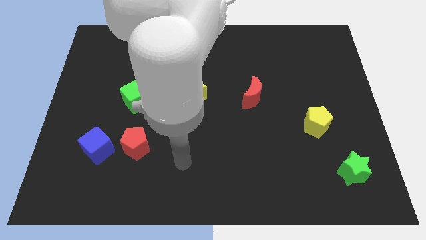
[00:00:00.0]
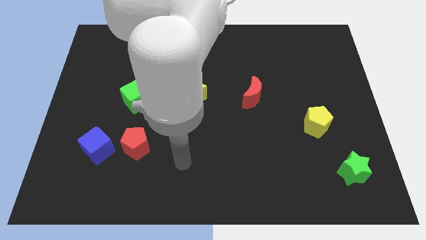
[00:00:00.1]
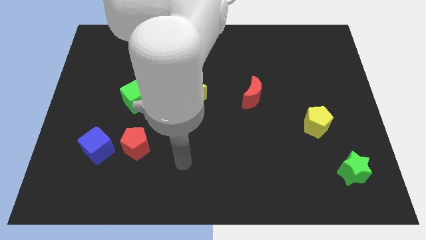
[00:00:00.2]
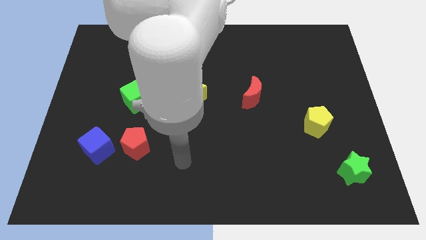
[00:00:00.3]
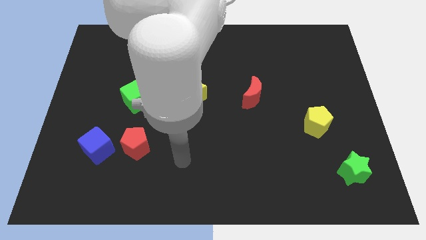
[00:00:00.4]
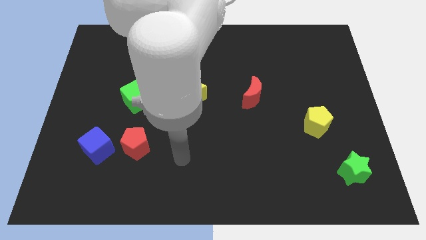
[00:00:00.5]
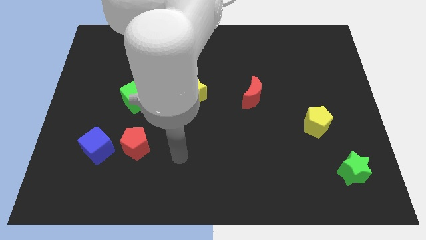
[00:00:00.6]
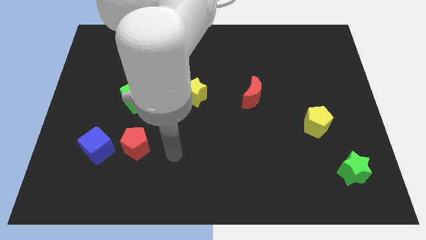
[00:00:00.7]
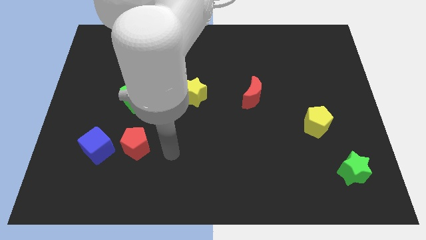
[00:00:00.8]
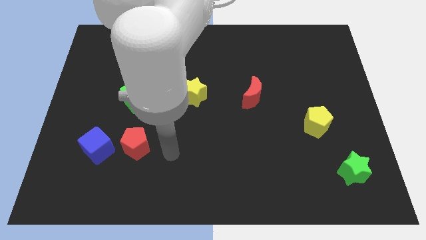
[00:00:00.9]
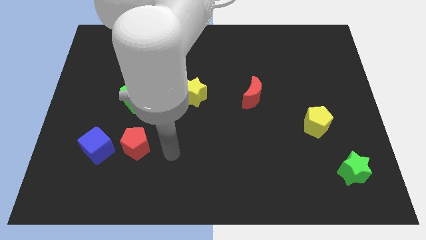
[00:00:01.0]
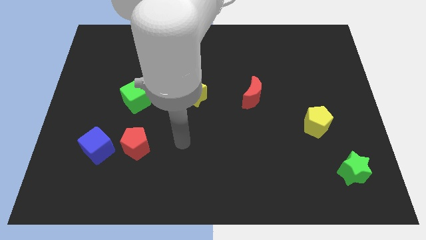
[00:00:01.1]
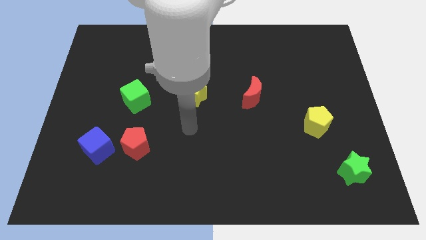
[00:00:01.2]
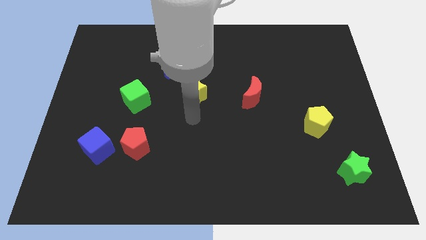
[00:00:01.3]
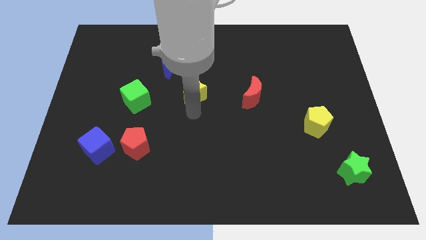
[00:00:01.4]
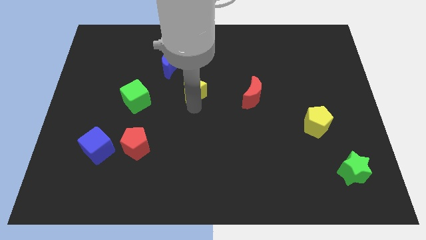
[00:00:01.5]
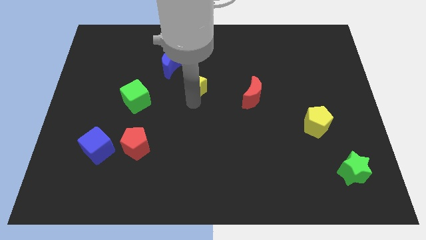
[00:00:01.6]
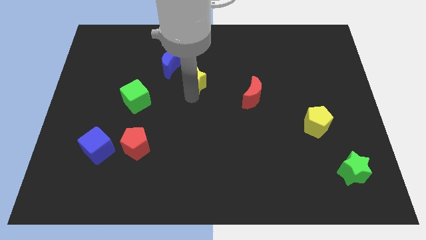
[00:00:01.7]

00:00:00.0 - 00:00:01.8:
move the yellow star slightly up

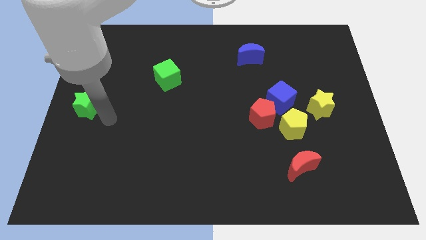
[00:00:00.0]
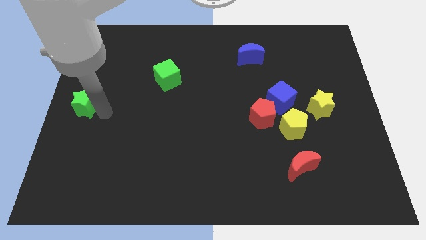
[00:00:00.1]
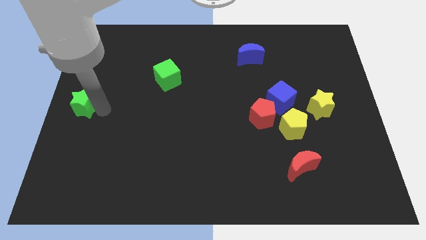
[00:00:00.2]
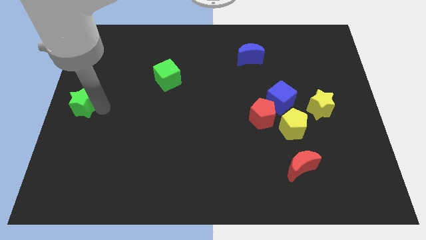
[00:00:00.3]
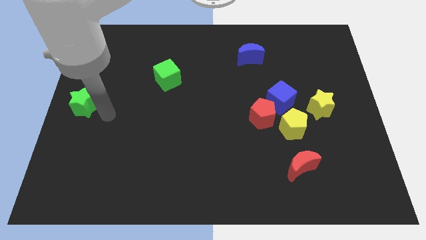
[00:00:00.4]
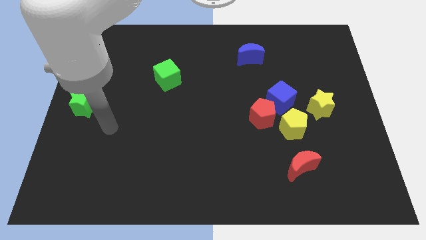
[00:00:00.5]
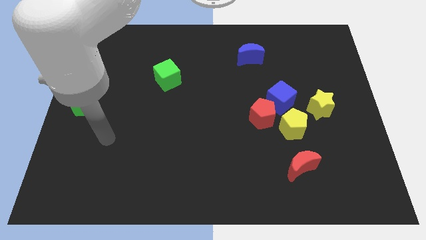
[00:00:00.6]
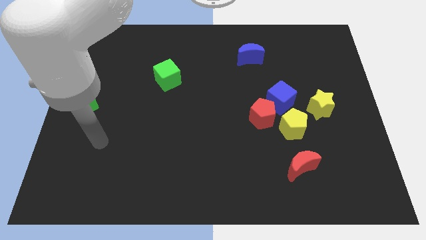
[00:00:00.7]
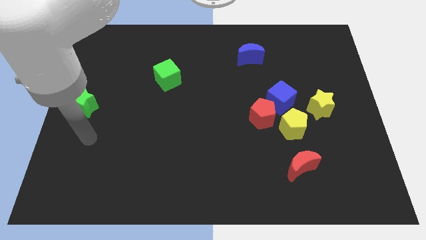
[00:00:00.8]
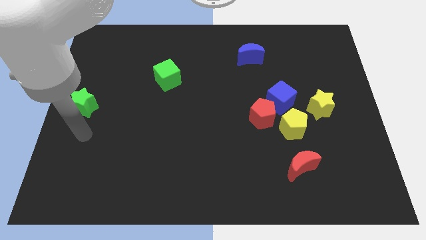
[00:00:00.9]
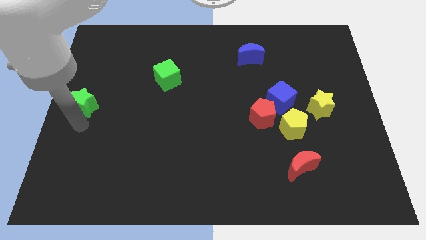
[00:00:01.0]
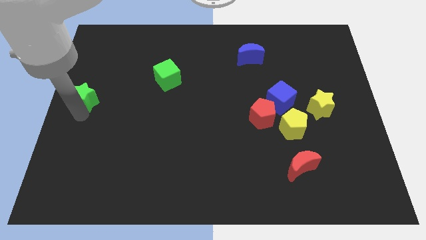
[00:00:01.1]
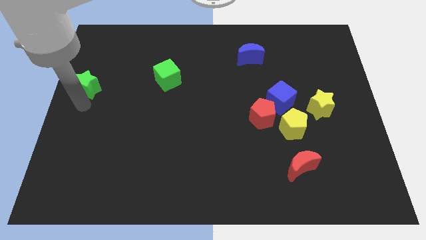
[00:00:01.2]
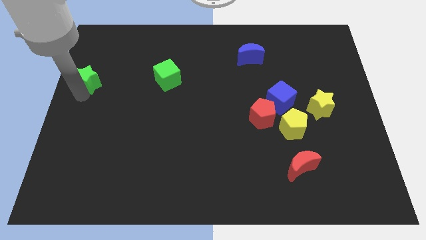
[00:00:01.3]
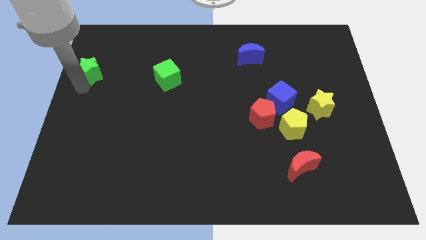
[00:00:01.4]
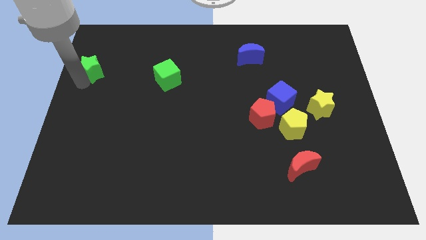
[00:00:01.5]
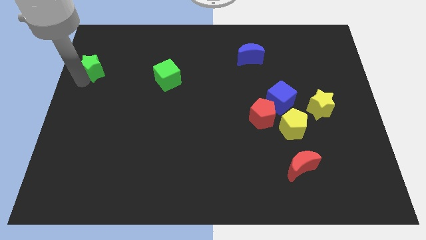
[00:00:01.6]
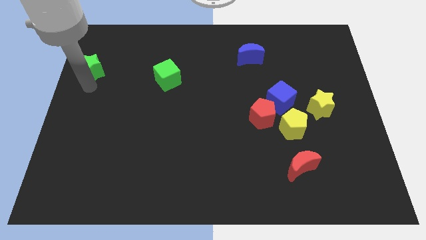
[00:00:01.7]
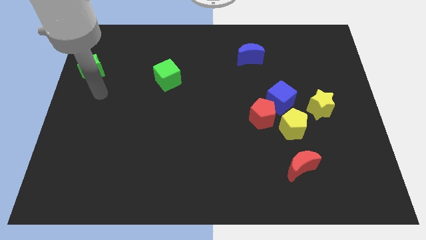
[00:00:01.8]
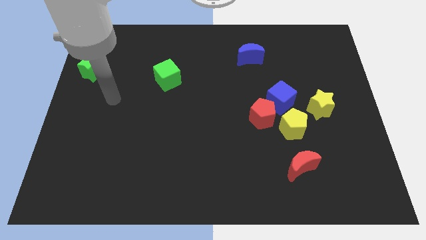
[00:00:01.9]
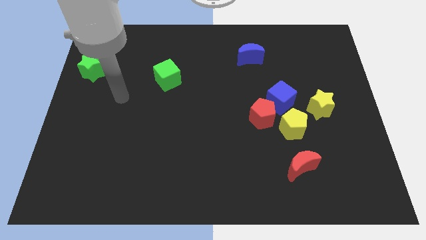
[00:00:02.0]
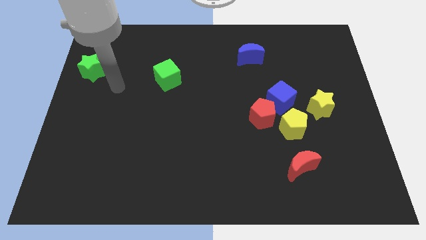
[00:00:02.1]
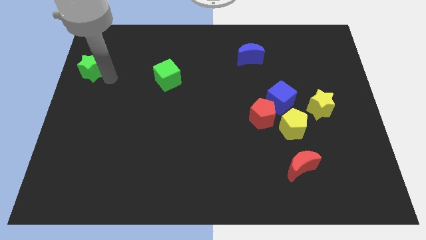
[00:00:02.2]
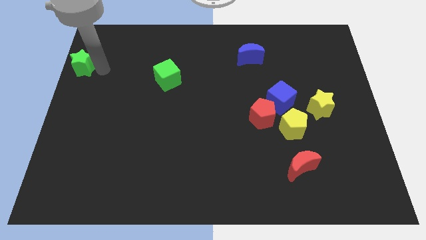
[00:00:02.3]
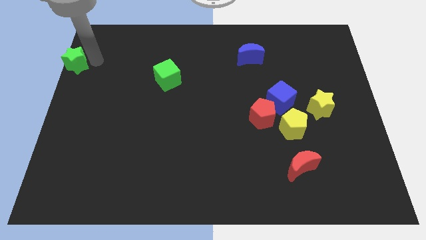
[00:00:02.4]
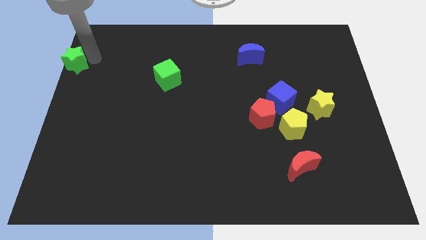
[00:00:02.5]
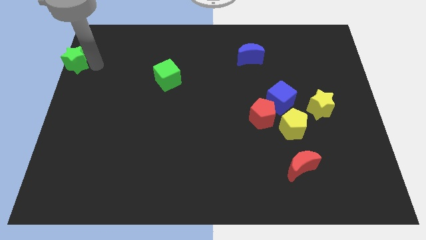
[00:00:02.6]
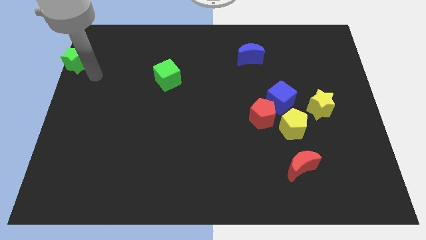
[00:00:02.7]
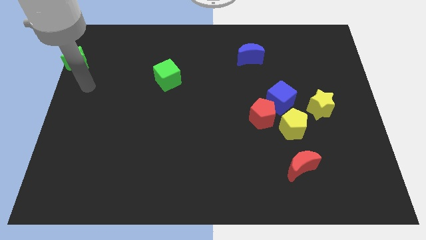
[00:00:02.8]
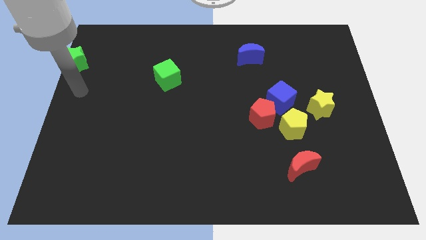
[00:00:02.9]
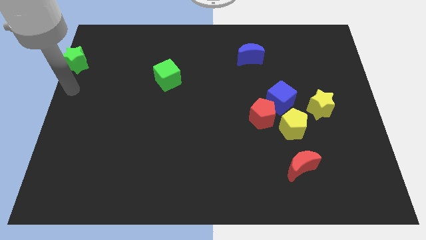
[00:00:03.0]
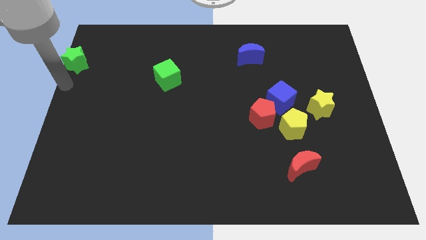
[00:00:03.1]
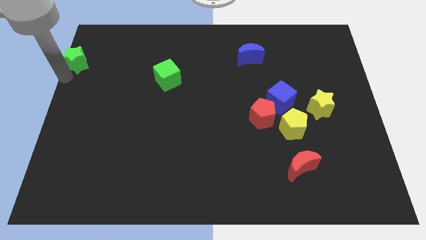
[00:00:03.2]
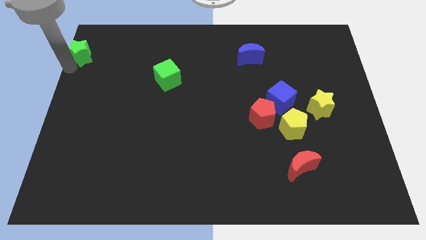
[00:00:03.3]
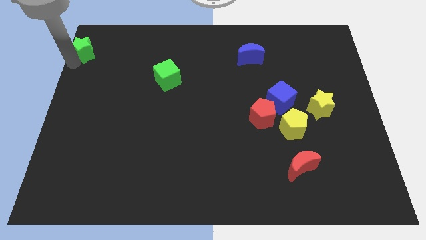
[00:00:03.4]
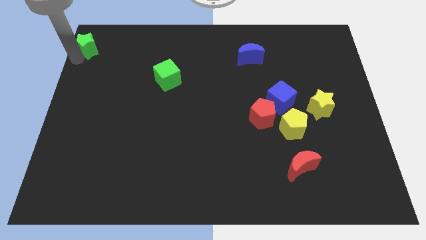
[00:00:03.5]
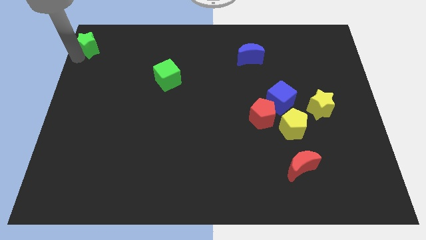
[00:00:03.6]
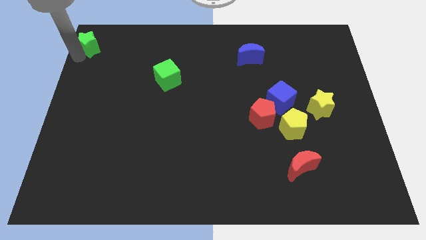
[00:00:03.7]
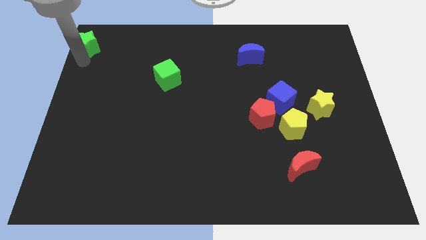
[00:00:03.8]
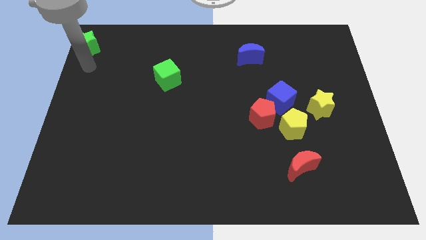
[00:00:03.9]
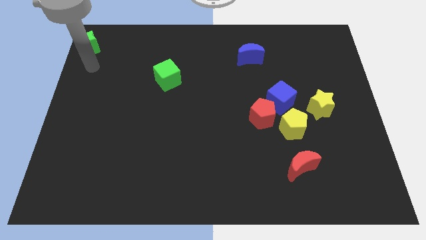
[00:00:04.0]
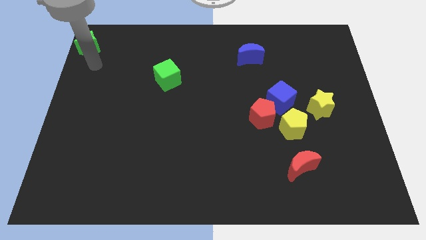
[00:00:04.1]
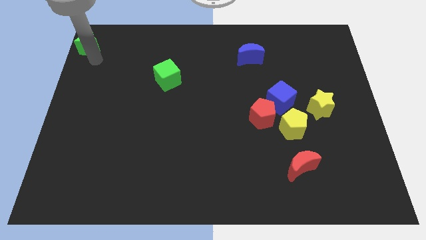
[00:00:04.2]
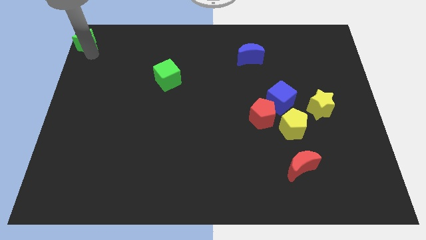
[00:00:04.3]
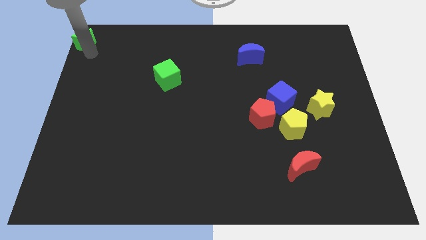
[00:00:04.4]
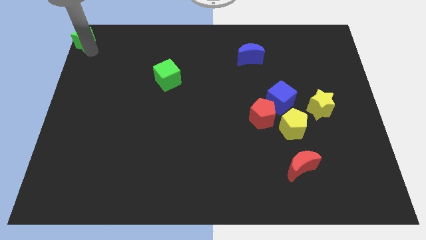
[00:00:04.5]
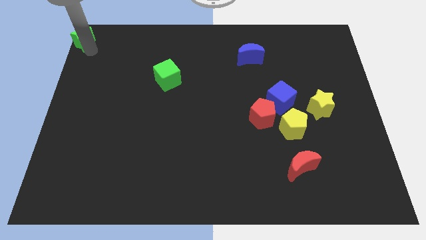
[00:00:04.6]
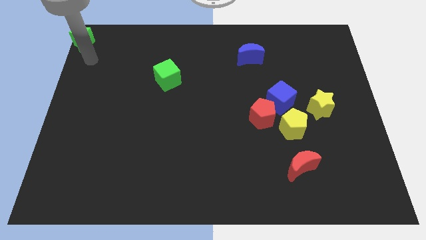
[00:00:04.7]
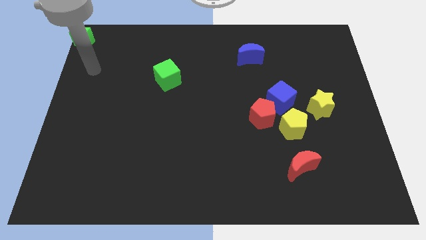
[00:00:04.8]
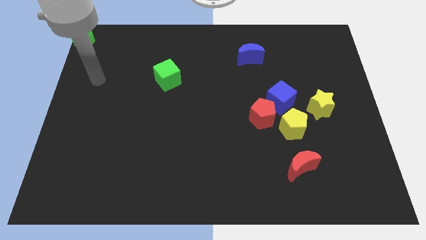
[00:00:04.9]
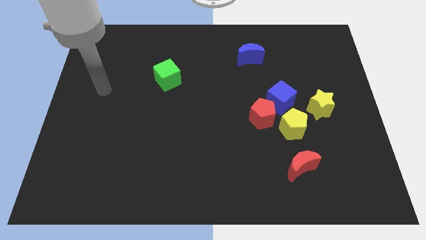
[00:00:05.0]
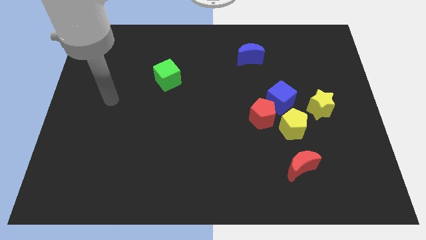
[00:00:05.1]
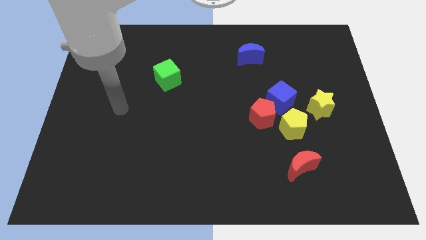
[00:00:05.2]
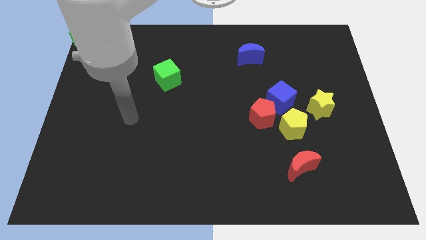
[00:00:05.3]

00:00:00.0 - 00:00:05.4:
move green star to the top left corner of the board

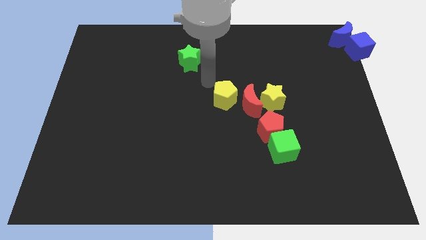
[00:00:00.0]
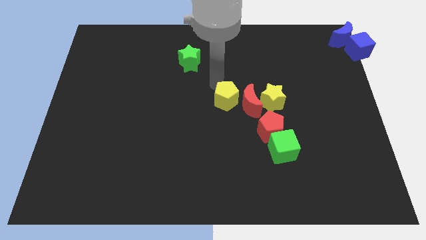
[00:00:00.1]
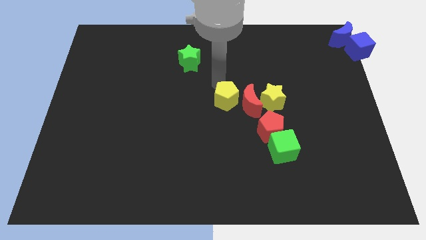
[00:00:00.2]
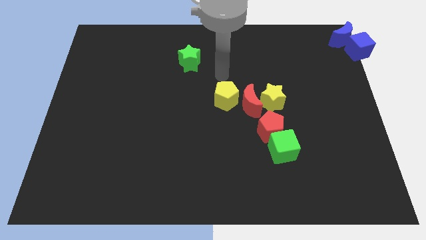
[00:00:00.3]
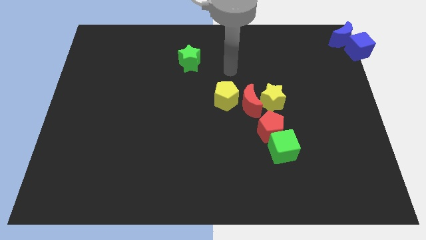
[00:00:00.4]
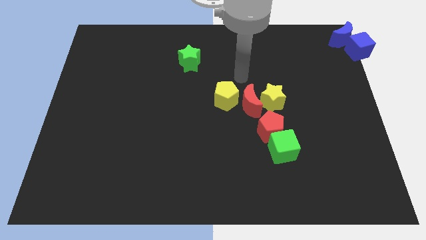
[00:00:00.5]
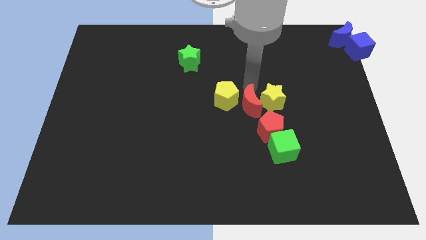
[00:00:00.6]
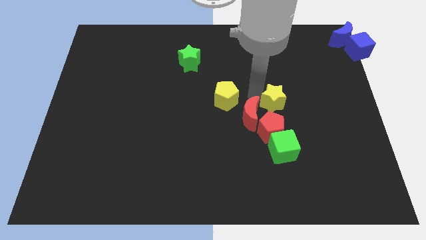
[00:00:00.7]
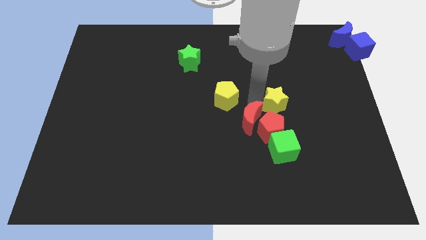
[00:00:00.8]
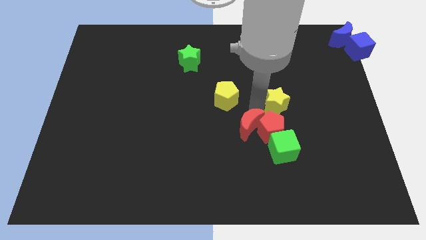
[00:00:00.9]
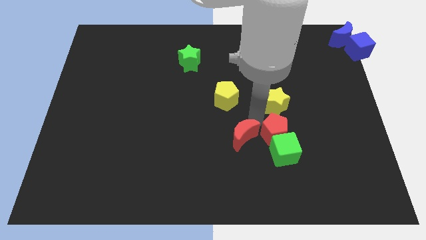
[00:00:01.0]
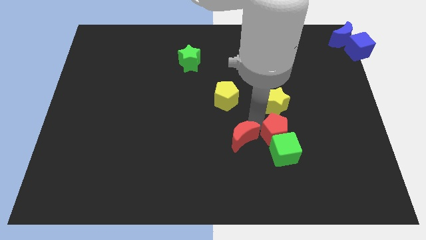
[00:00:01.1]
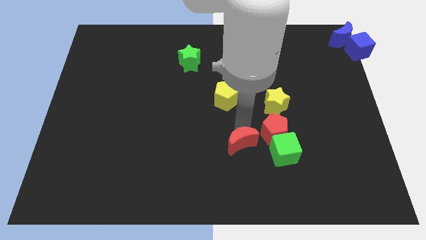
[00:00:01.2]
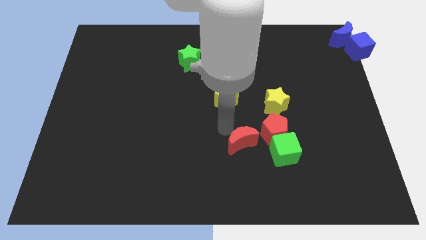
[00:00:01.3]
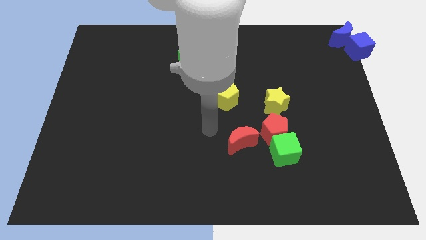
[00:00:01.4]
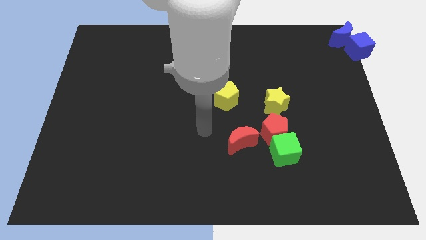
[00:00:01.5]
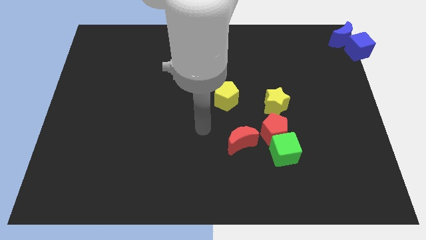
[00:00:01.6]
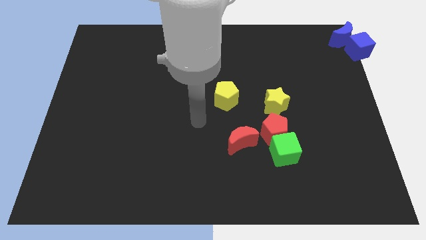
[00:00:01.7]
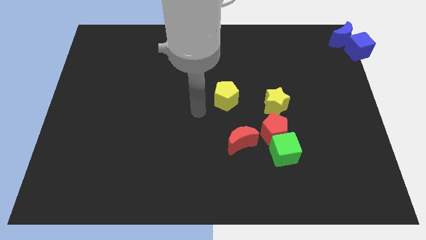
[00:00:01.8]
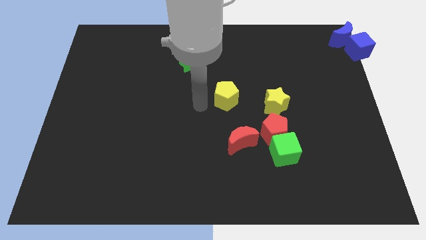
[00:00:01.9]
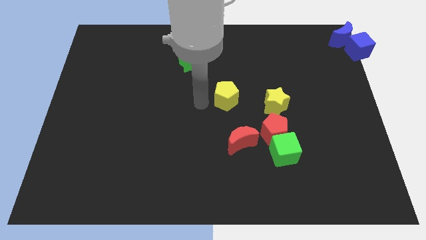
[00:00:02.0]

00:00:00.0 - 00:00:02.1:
move red moon towards the red pentagon
